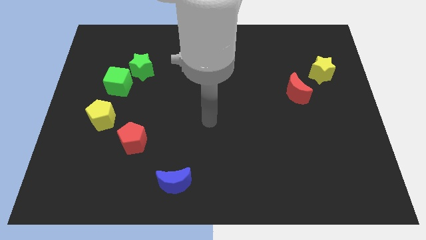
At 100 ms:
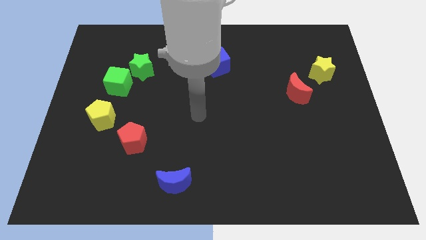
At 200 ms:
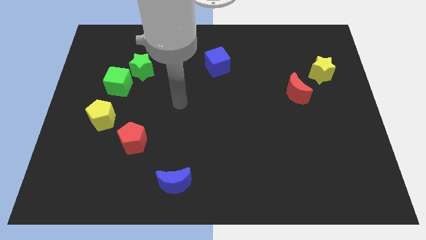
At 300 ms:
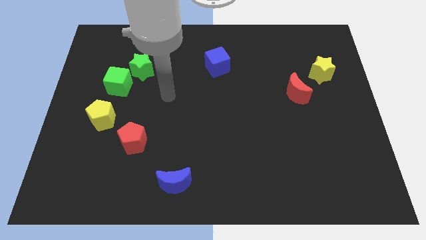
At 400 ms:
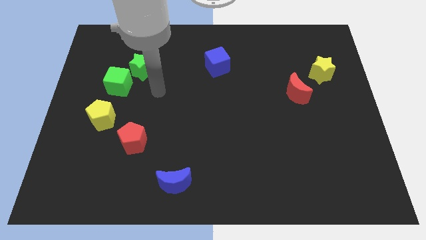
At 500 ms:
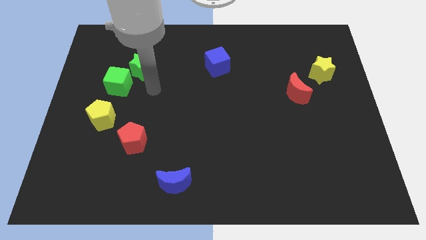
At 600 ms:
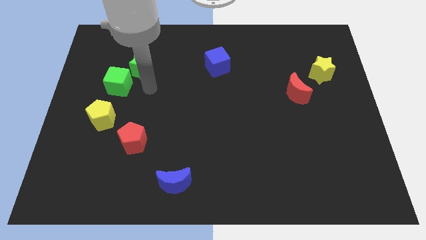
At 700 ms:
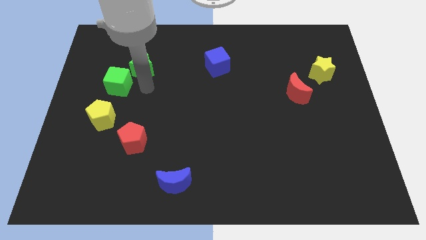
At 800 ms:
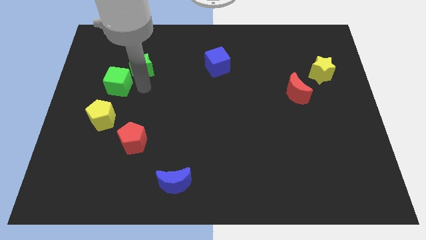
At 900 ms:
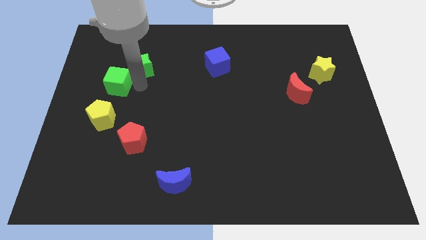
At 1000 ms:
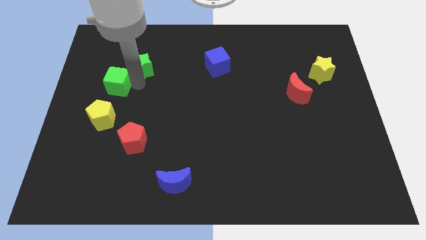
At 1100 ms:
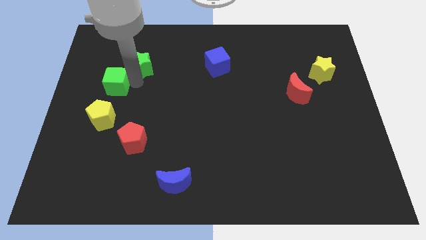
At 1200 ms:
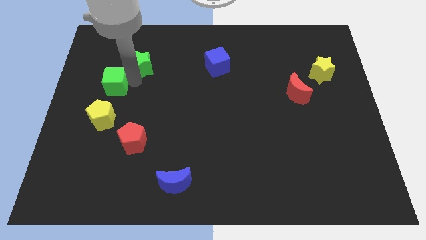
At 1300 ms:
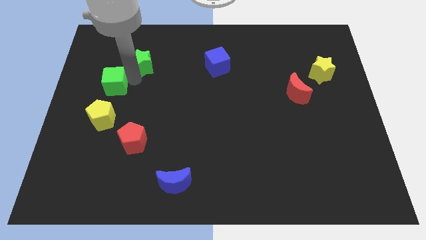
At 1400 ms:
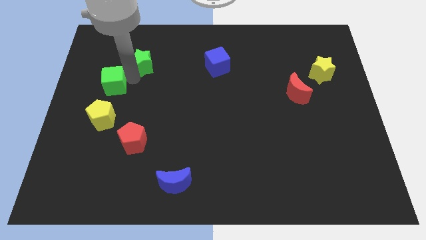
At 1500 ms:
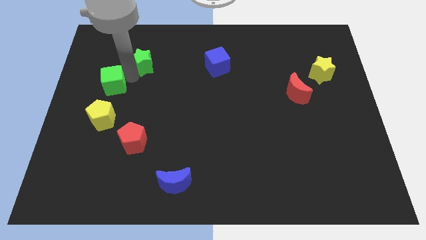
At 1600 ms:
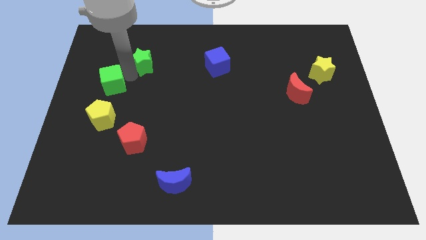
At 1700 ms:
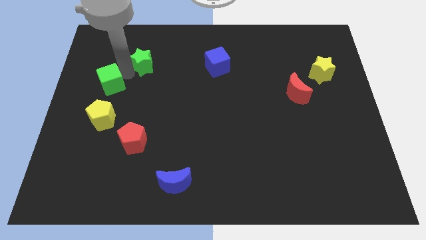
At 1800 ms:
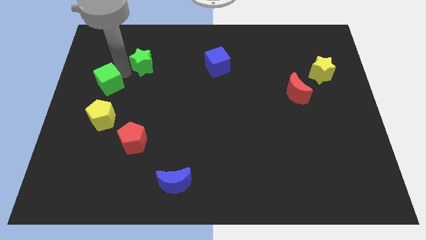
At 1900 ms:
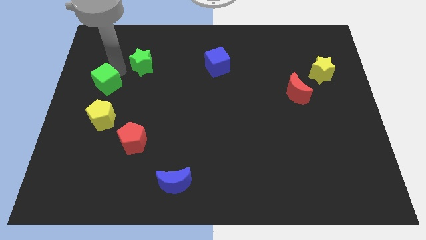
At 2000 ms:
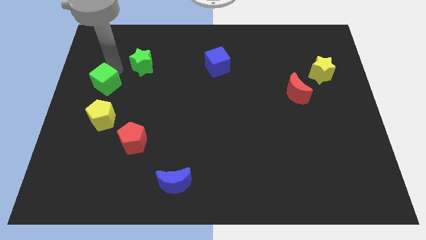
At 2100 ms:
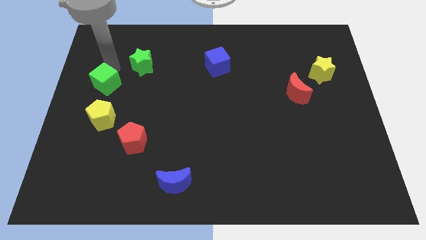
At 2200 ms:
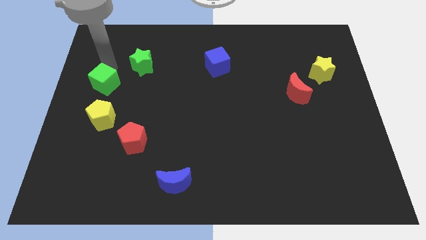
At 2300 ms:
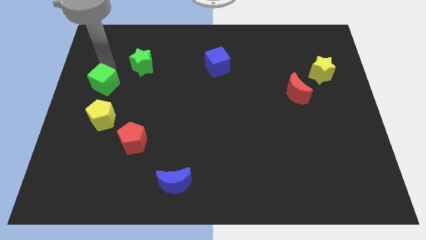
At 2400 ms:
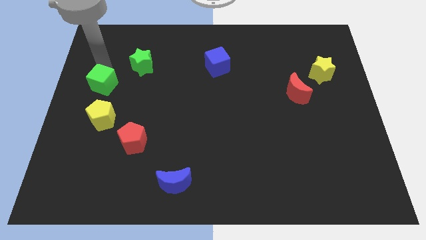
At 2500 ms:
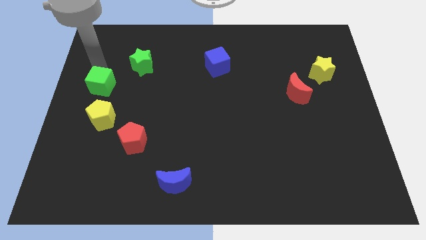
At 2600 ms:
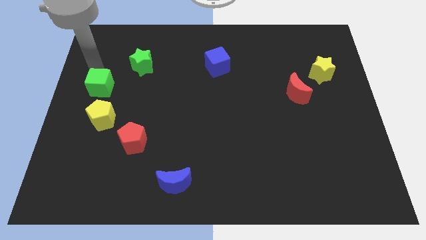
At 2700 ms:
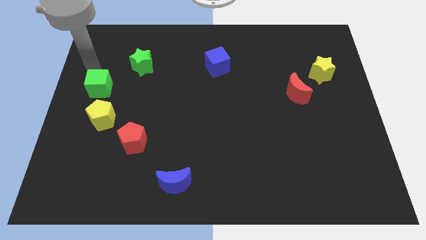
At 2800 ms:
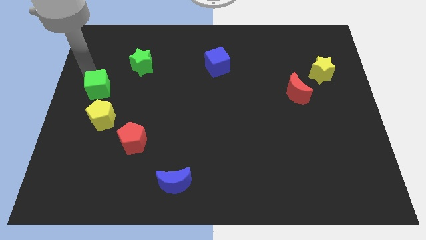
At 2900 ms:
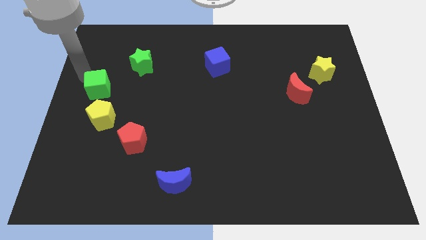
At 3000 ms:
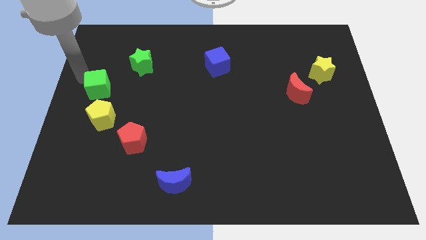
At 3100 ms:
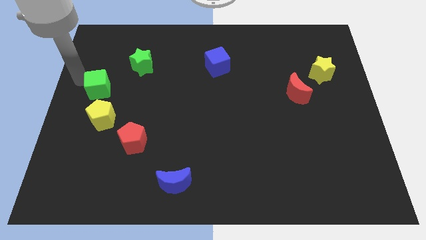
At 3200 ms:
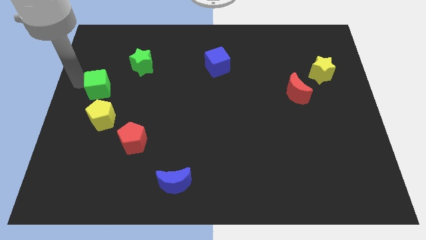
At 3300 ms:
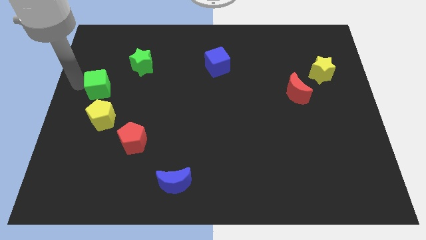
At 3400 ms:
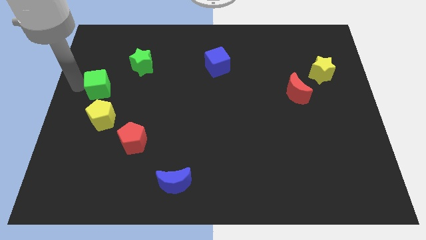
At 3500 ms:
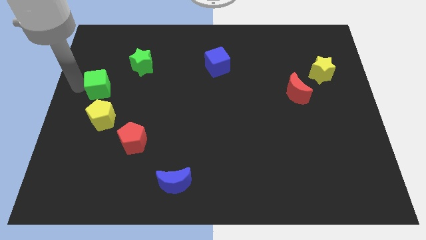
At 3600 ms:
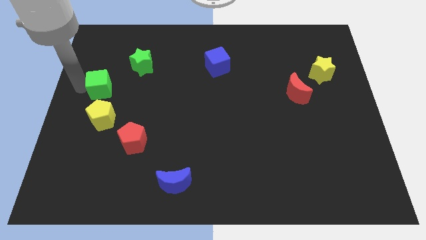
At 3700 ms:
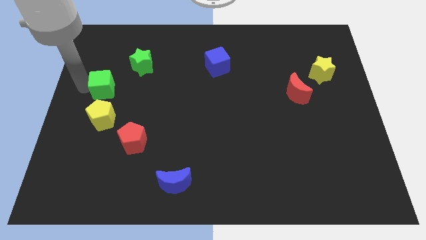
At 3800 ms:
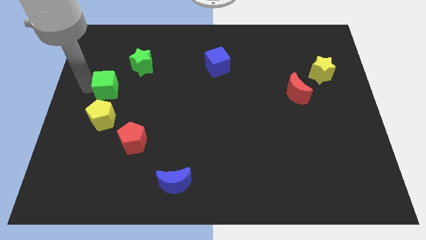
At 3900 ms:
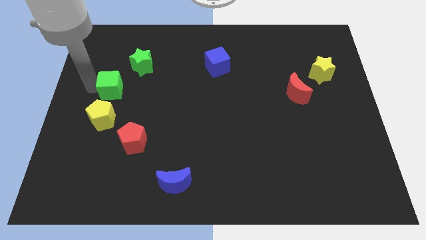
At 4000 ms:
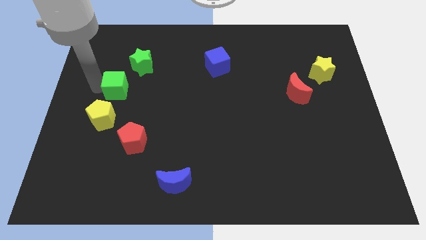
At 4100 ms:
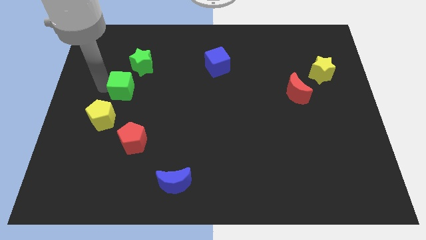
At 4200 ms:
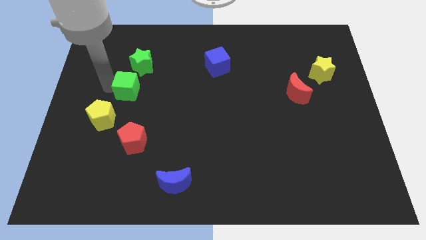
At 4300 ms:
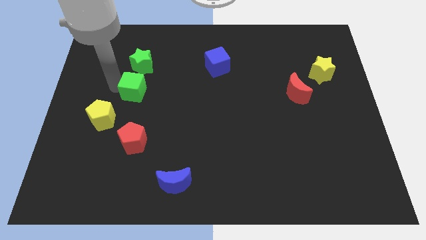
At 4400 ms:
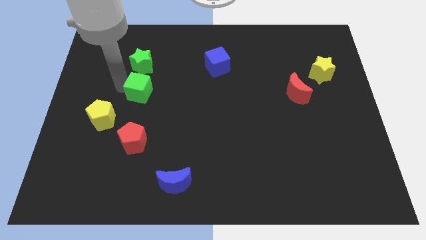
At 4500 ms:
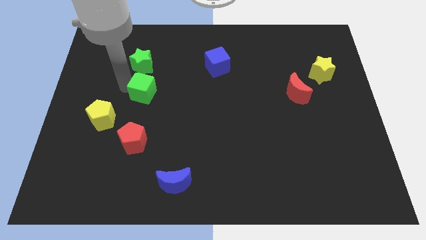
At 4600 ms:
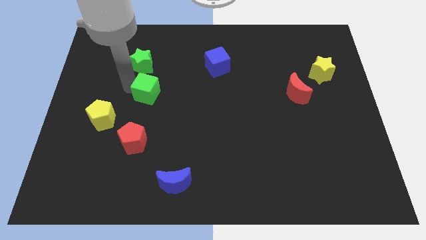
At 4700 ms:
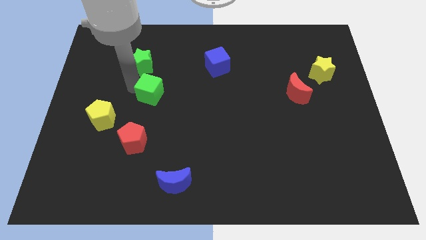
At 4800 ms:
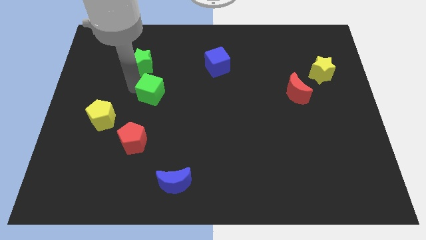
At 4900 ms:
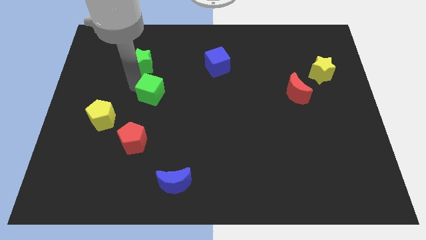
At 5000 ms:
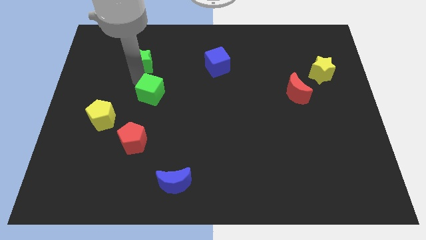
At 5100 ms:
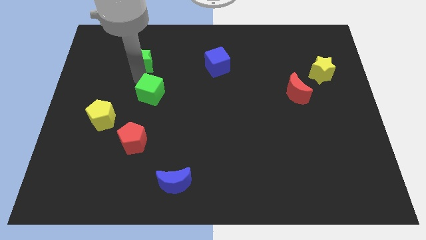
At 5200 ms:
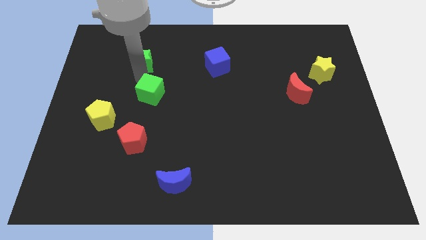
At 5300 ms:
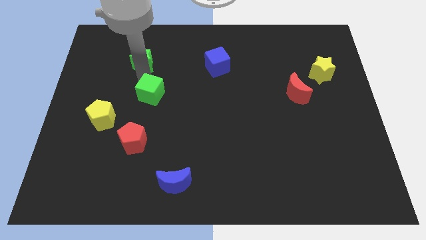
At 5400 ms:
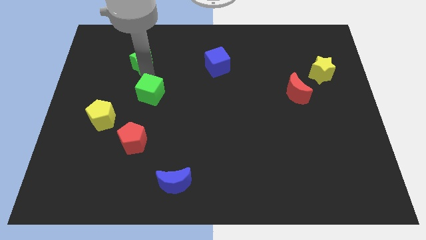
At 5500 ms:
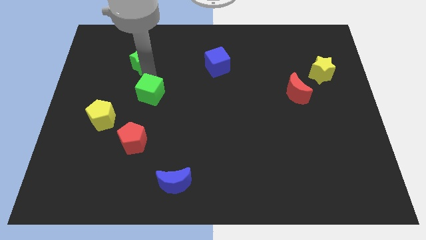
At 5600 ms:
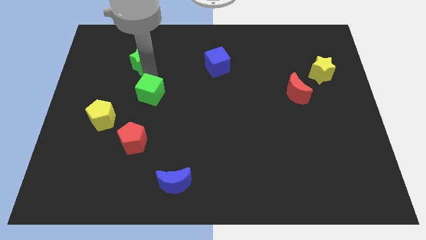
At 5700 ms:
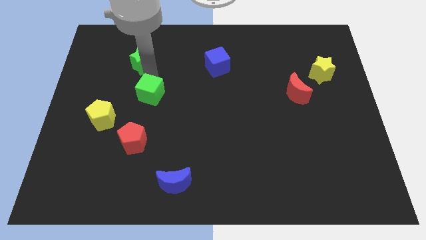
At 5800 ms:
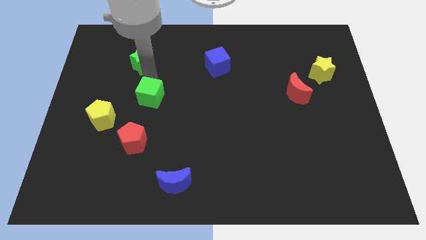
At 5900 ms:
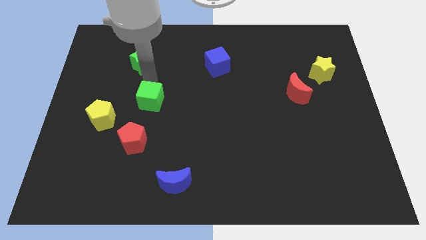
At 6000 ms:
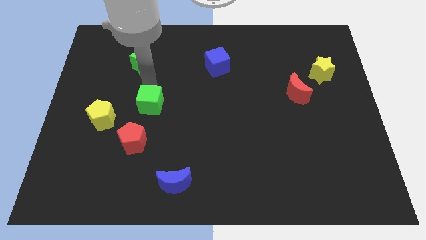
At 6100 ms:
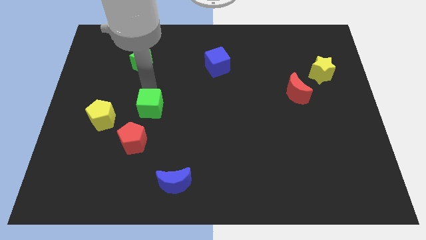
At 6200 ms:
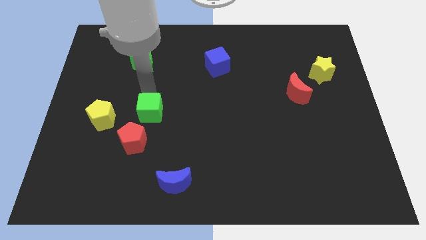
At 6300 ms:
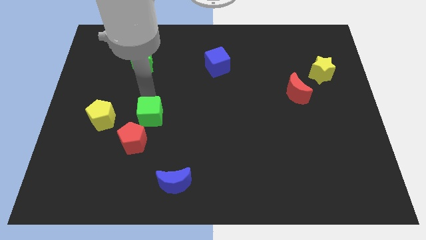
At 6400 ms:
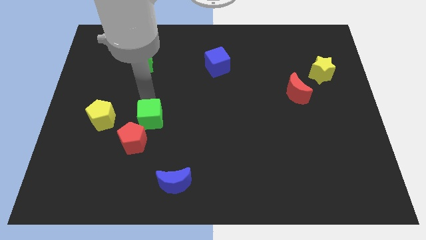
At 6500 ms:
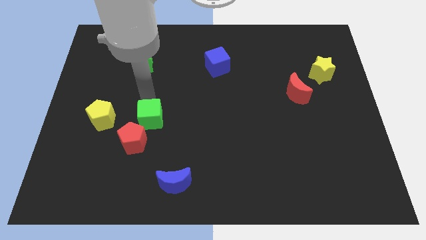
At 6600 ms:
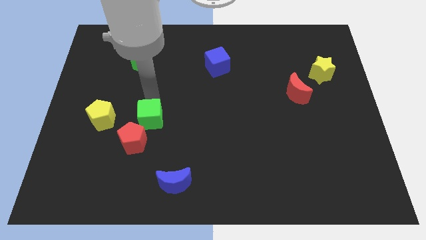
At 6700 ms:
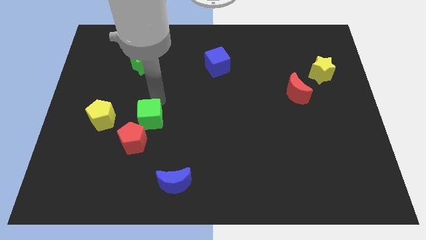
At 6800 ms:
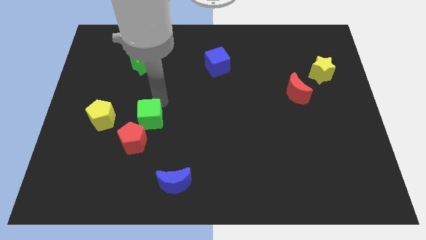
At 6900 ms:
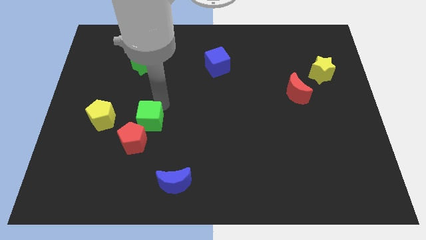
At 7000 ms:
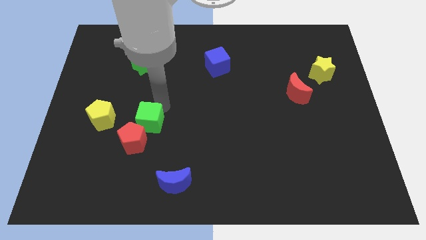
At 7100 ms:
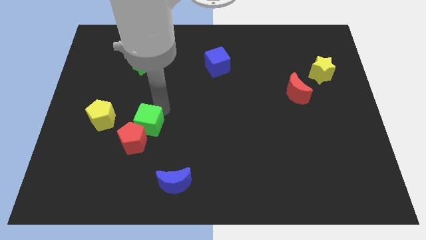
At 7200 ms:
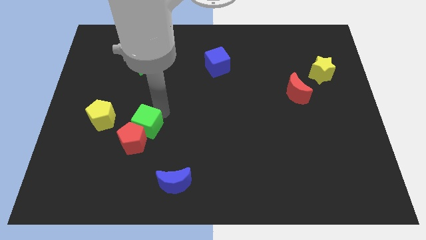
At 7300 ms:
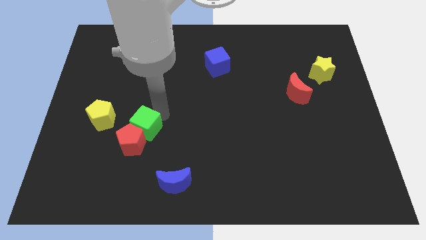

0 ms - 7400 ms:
put the green cube towards the red pentagon

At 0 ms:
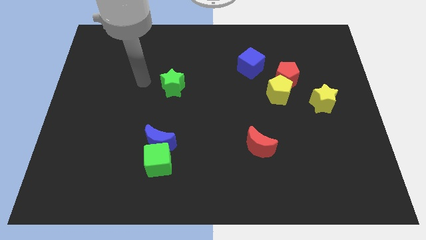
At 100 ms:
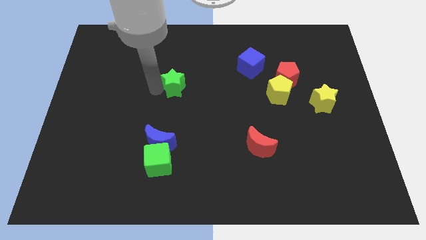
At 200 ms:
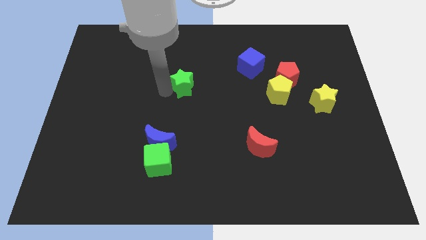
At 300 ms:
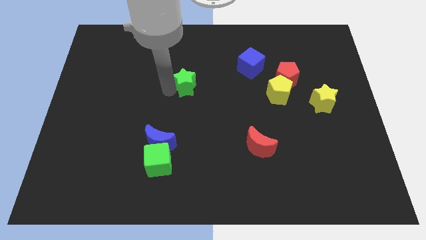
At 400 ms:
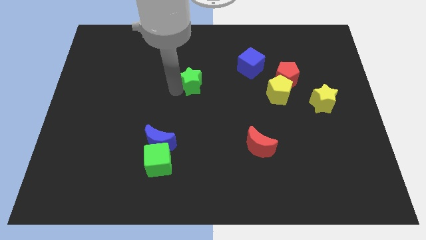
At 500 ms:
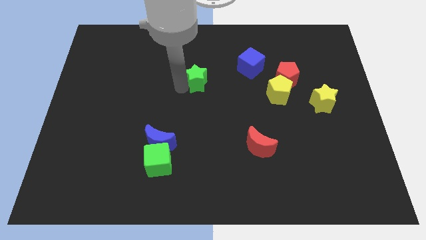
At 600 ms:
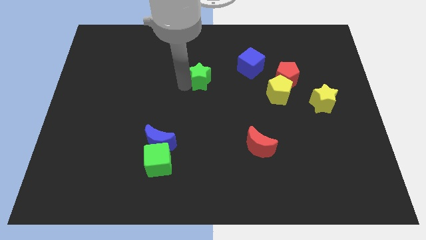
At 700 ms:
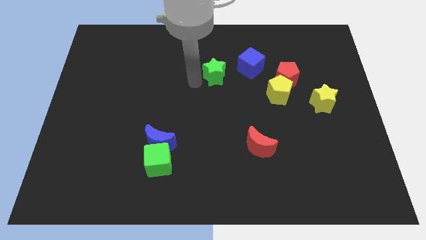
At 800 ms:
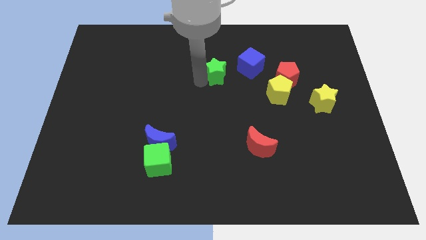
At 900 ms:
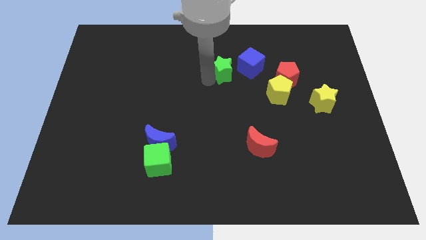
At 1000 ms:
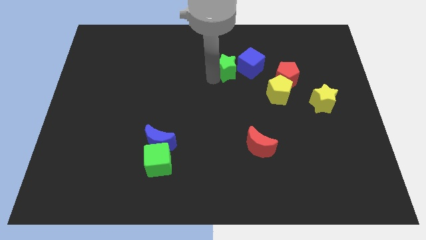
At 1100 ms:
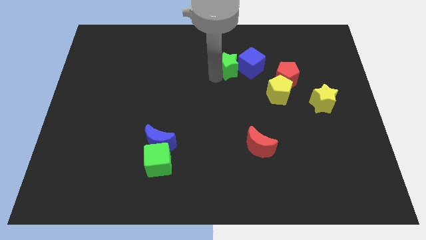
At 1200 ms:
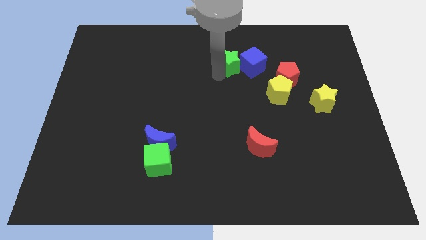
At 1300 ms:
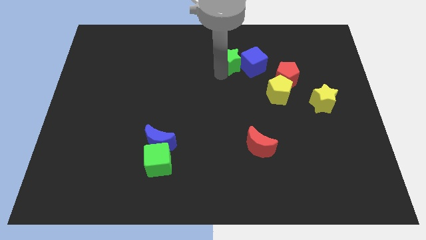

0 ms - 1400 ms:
push the green star towards the blue cube
